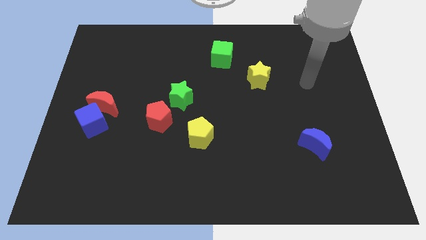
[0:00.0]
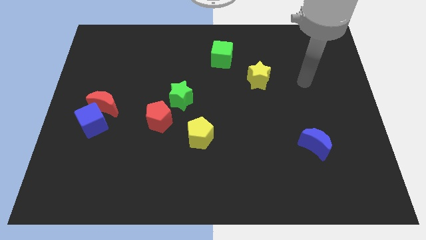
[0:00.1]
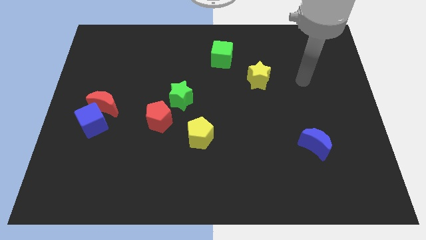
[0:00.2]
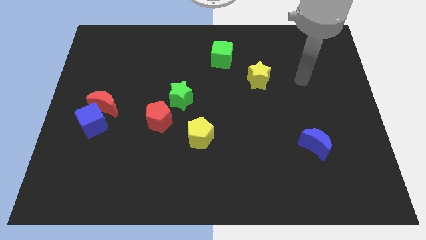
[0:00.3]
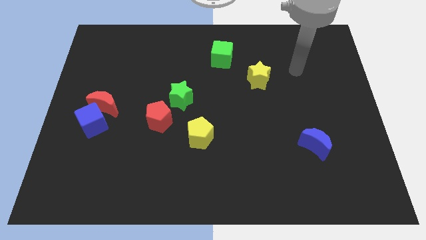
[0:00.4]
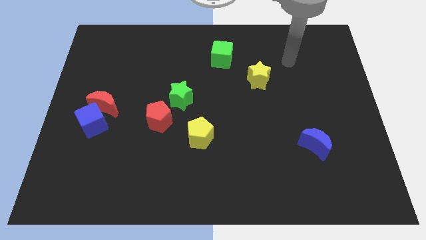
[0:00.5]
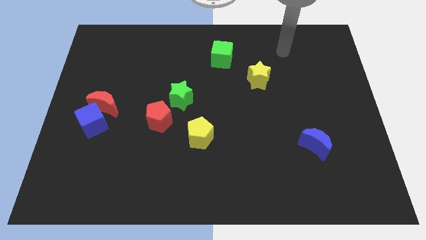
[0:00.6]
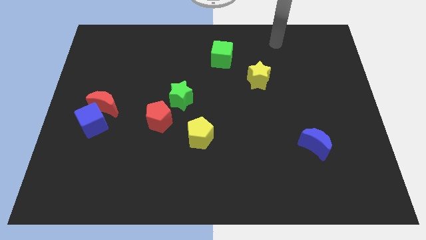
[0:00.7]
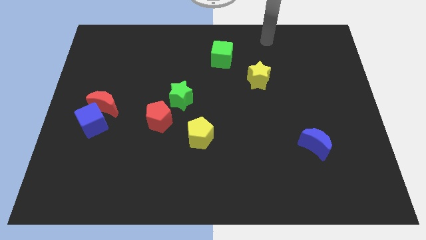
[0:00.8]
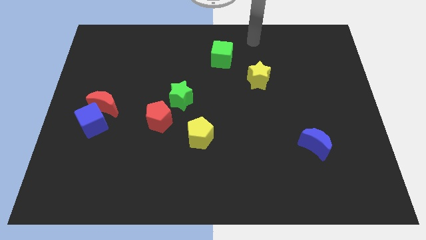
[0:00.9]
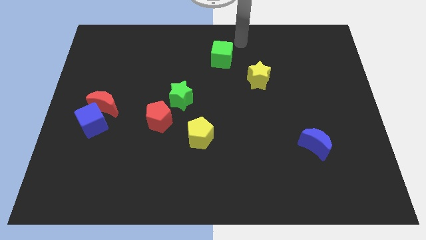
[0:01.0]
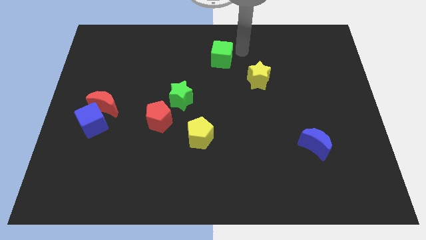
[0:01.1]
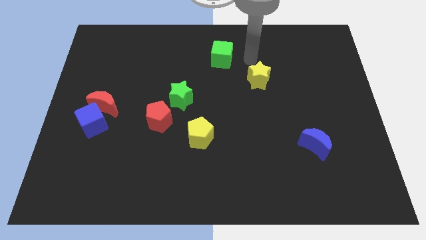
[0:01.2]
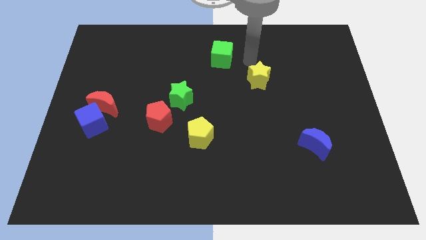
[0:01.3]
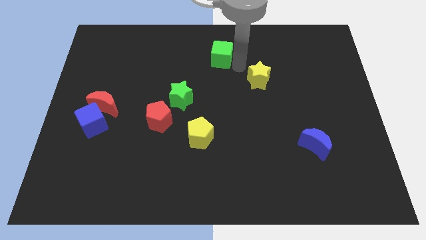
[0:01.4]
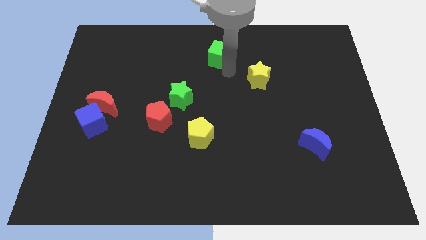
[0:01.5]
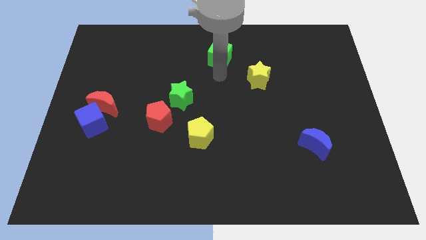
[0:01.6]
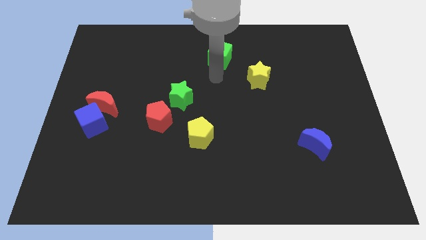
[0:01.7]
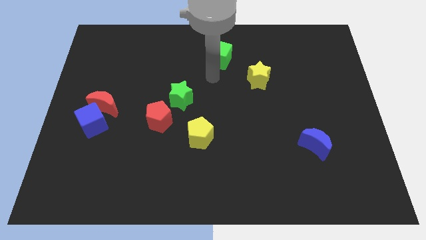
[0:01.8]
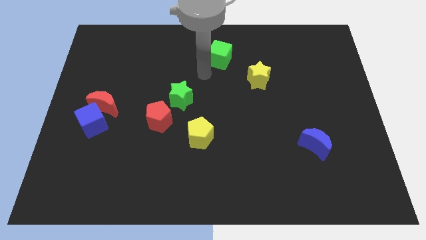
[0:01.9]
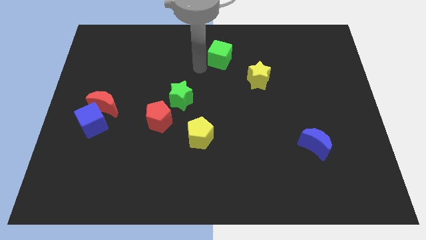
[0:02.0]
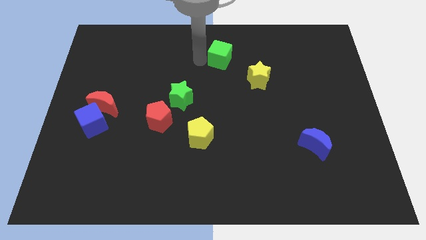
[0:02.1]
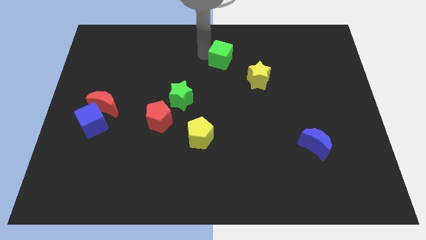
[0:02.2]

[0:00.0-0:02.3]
move your arm left to the green cube

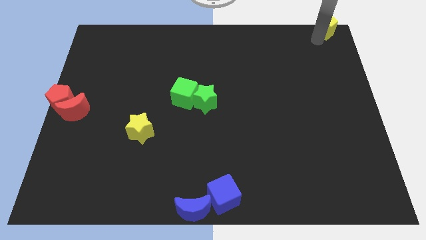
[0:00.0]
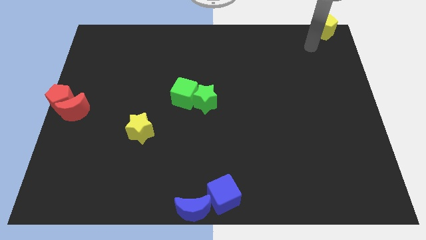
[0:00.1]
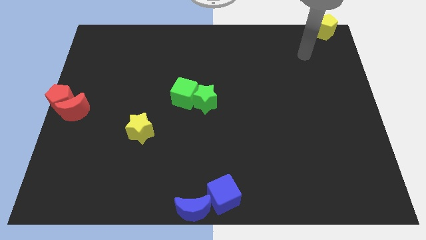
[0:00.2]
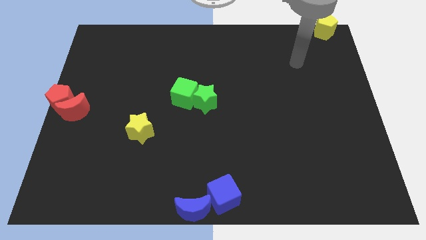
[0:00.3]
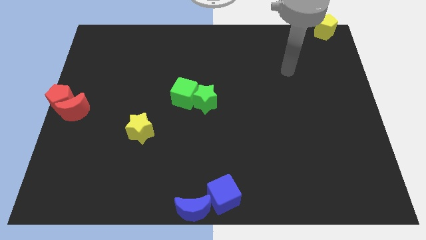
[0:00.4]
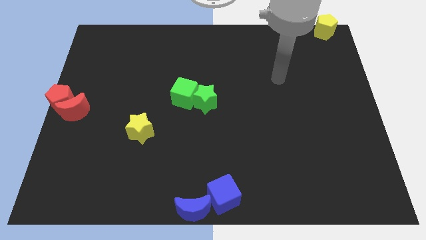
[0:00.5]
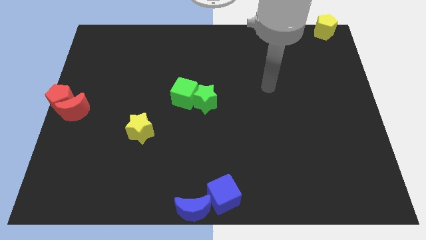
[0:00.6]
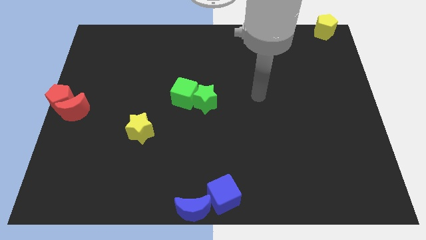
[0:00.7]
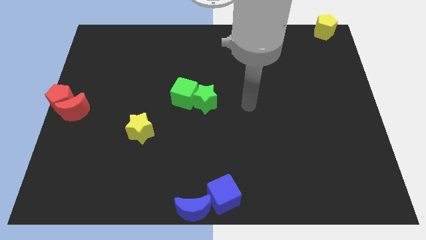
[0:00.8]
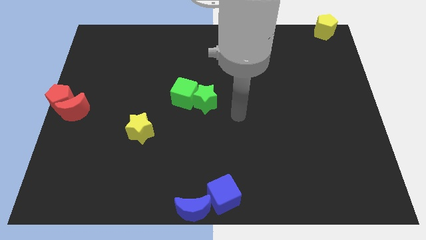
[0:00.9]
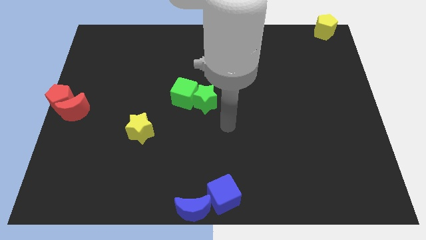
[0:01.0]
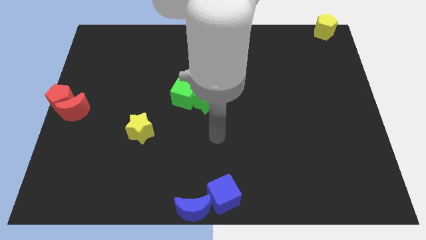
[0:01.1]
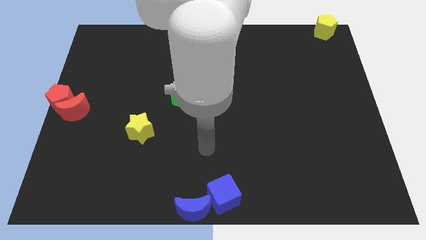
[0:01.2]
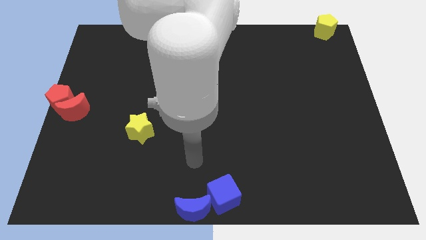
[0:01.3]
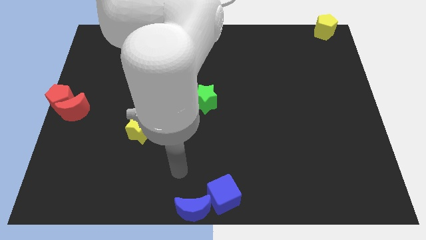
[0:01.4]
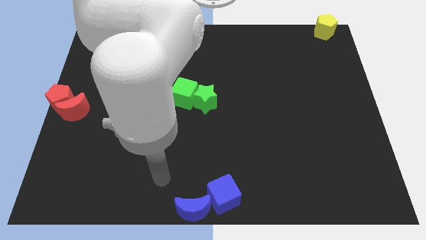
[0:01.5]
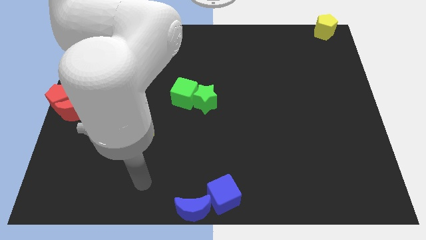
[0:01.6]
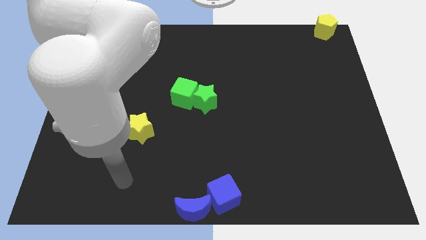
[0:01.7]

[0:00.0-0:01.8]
move your arm away from the yellow pentagon

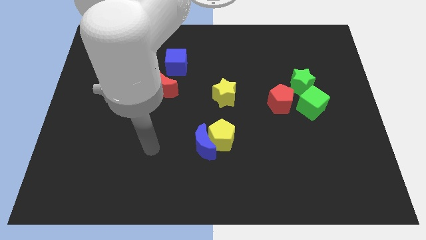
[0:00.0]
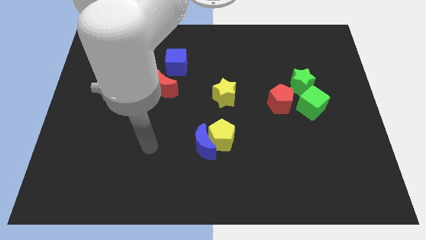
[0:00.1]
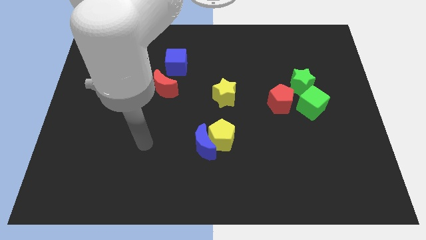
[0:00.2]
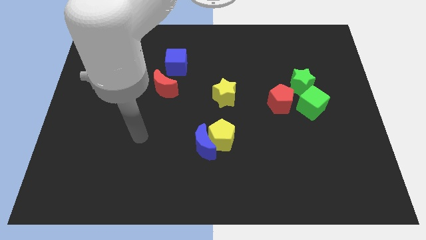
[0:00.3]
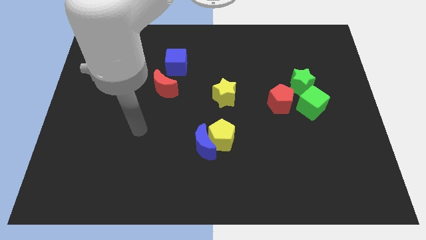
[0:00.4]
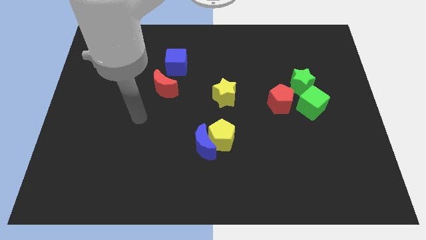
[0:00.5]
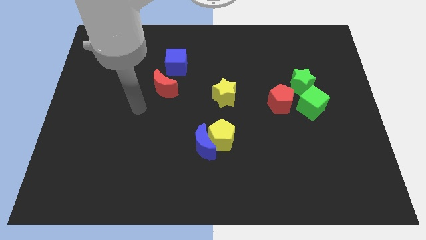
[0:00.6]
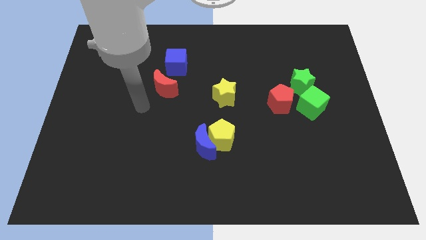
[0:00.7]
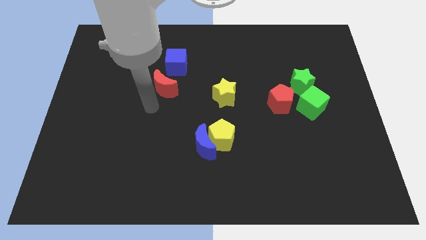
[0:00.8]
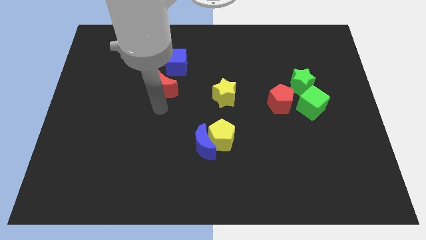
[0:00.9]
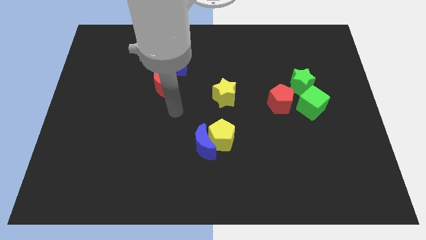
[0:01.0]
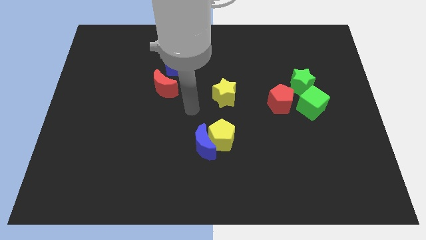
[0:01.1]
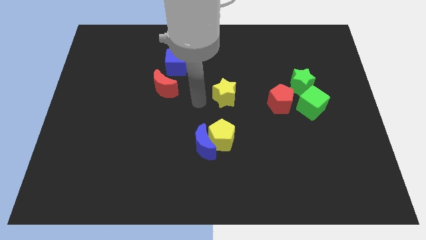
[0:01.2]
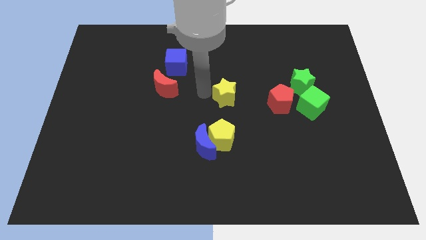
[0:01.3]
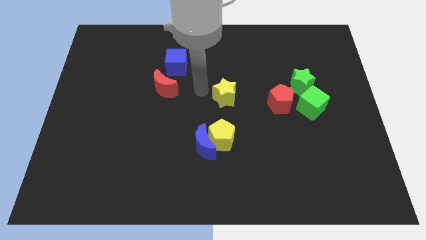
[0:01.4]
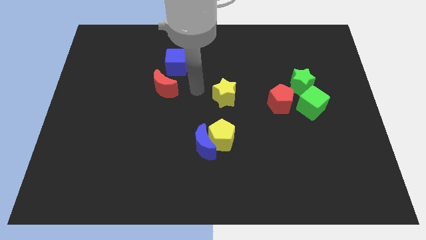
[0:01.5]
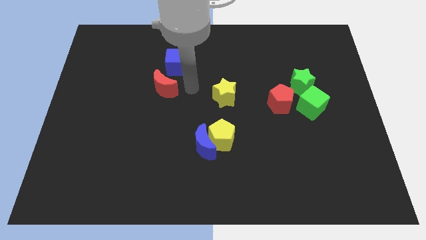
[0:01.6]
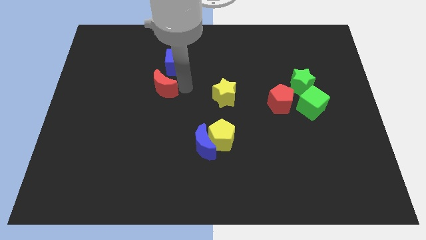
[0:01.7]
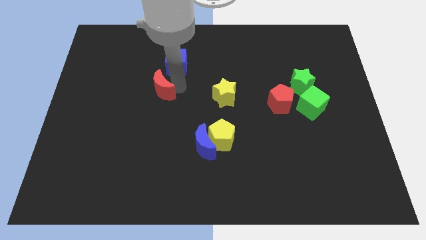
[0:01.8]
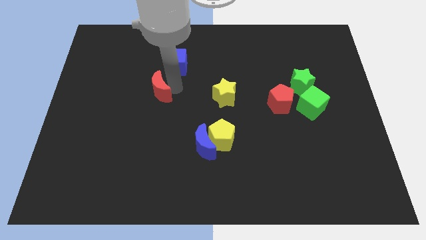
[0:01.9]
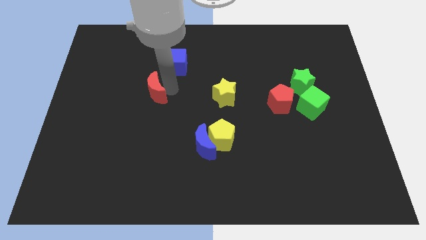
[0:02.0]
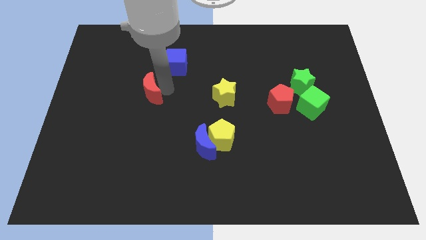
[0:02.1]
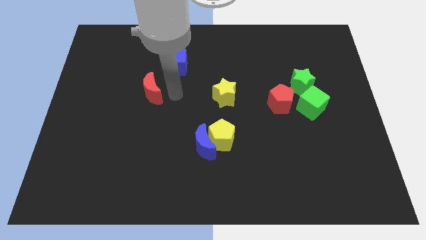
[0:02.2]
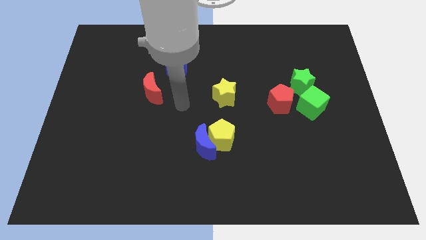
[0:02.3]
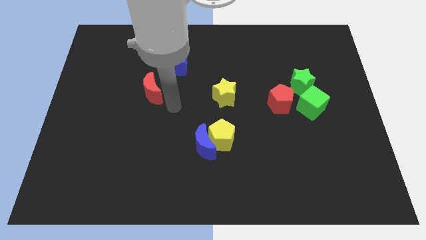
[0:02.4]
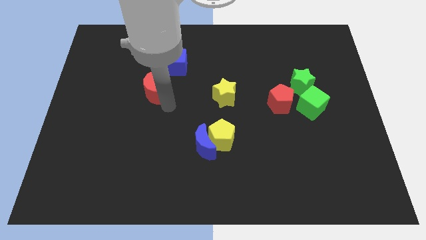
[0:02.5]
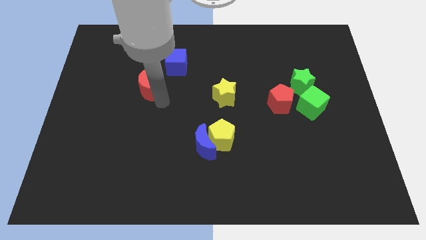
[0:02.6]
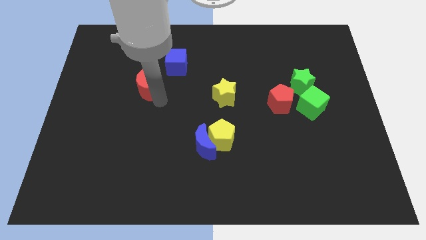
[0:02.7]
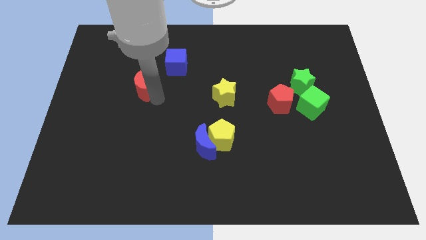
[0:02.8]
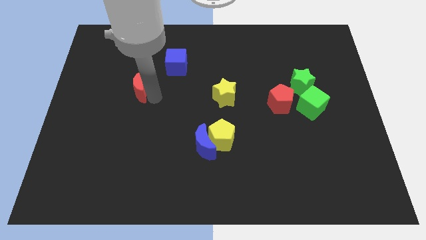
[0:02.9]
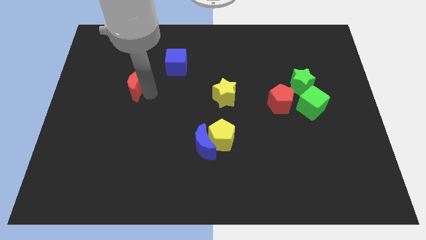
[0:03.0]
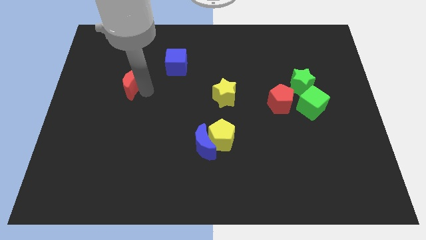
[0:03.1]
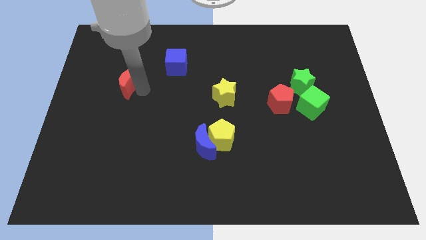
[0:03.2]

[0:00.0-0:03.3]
move the red crescent diagonal to the blue cube

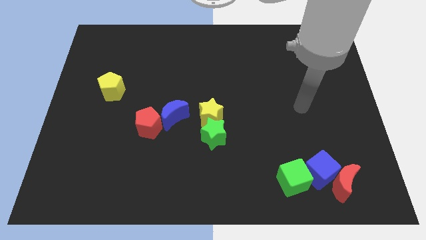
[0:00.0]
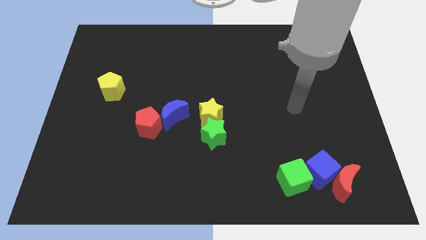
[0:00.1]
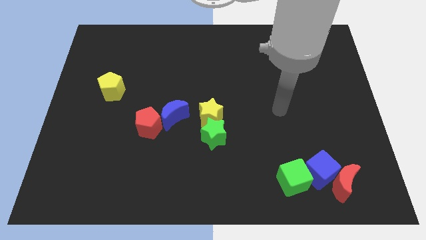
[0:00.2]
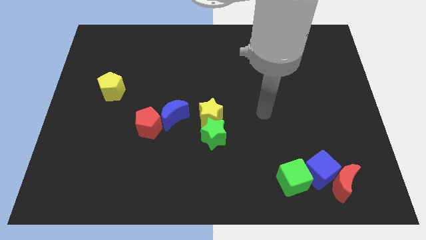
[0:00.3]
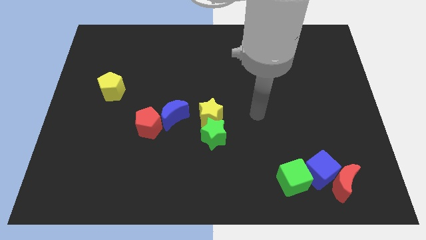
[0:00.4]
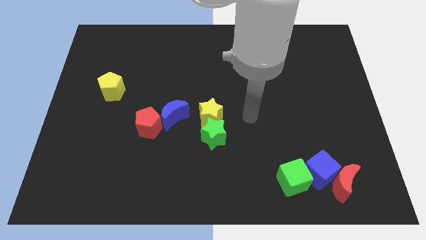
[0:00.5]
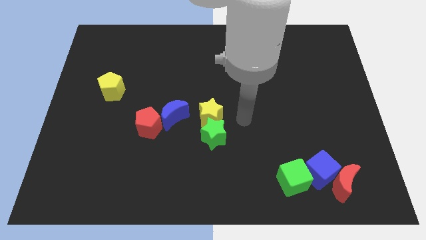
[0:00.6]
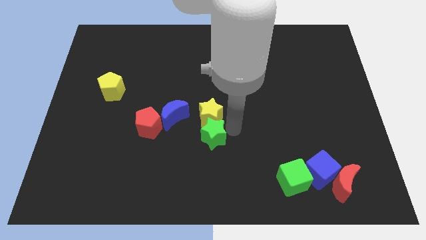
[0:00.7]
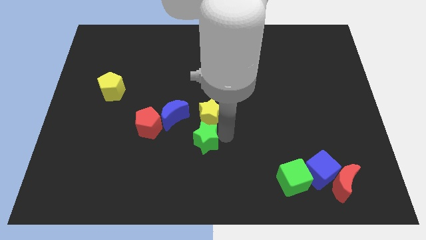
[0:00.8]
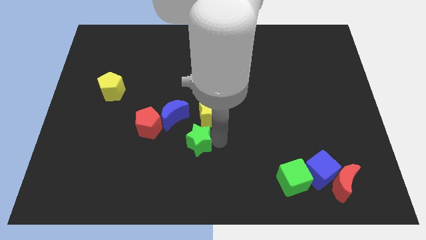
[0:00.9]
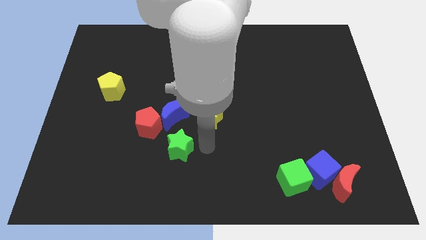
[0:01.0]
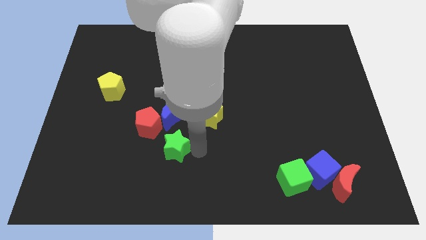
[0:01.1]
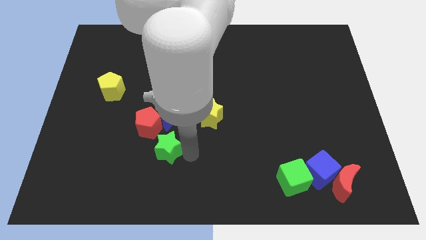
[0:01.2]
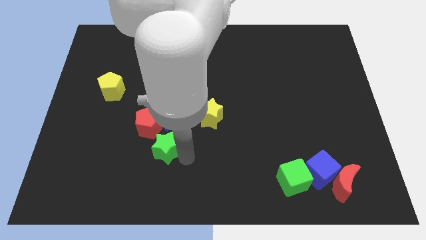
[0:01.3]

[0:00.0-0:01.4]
separate green star from yellow star

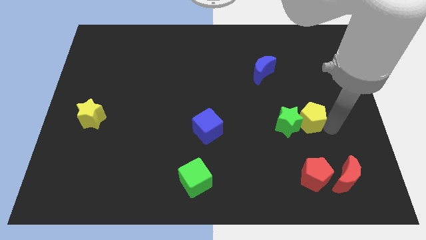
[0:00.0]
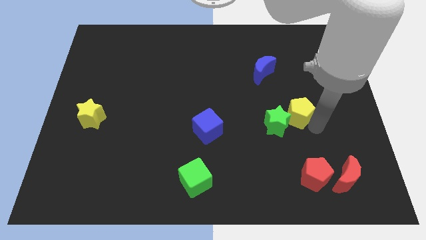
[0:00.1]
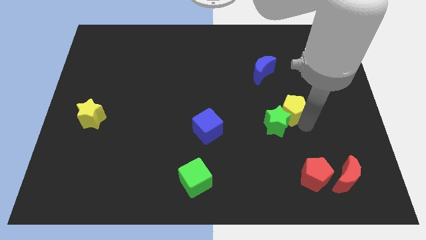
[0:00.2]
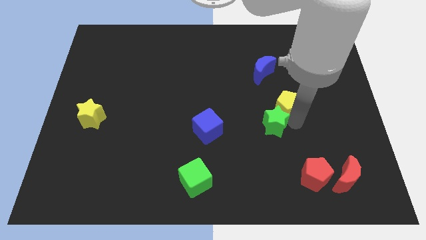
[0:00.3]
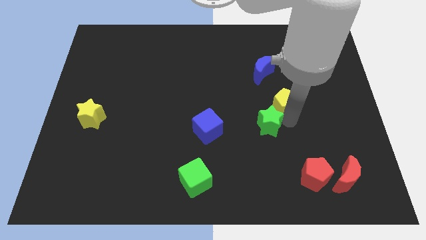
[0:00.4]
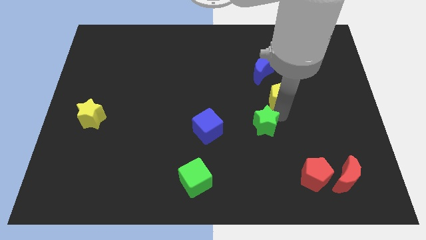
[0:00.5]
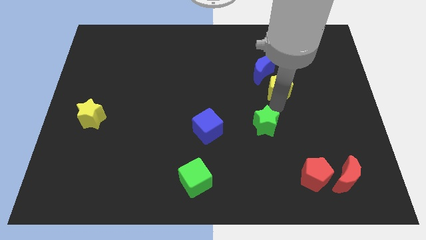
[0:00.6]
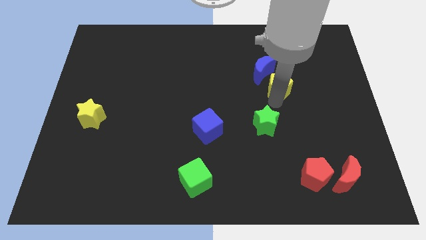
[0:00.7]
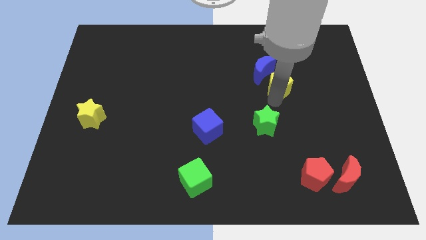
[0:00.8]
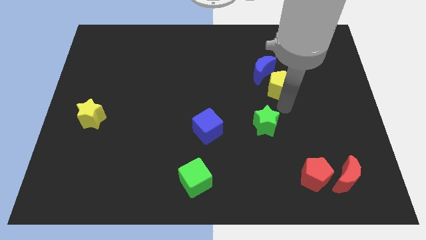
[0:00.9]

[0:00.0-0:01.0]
separate the yellow pentagon from green star
